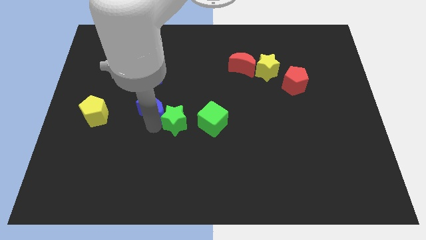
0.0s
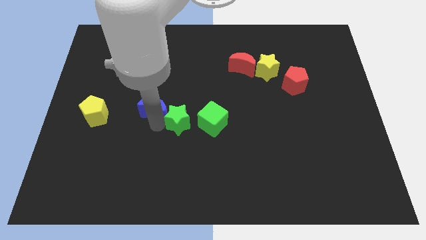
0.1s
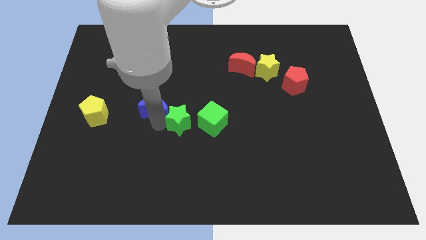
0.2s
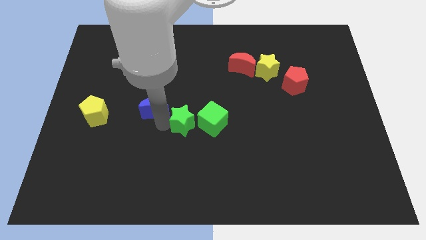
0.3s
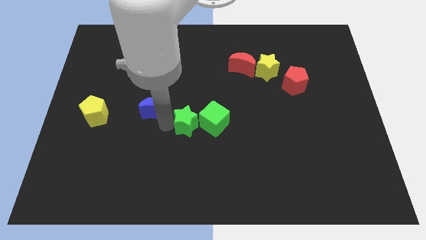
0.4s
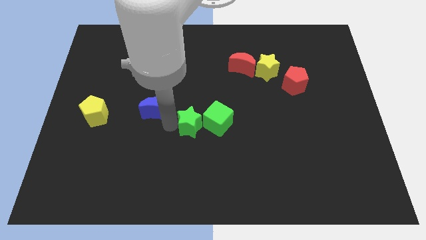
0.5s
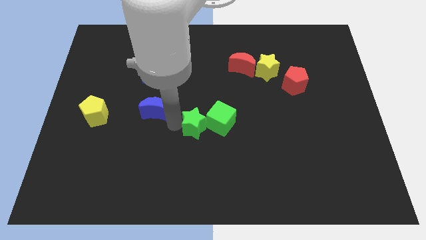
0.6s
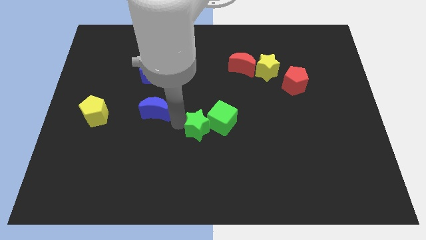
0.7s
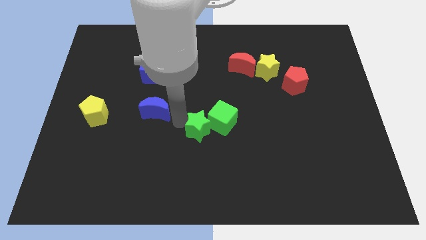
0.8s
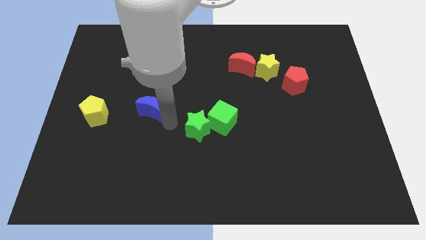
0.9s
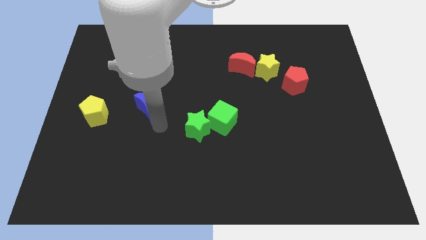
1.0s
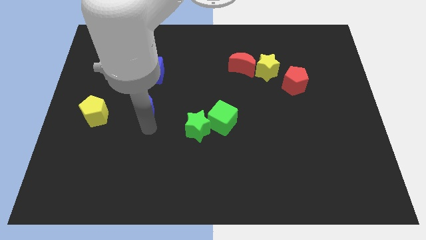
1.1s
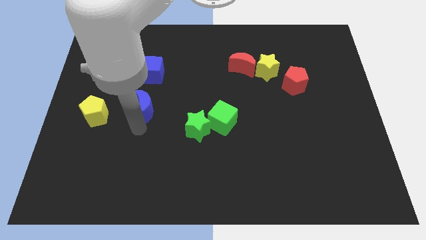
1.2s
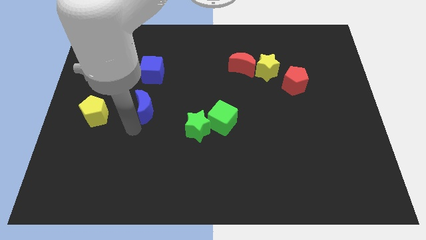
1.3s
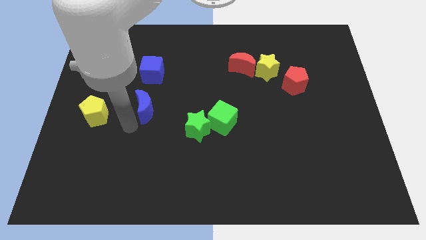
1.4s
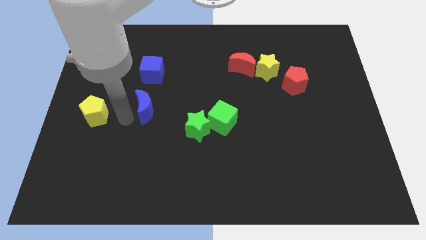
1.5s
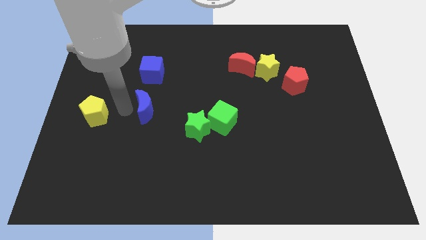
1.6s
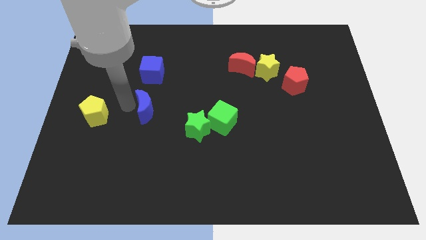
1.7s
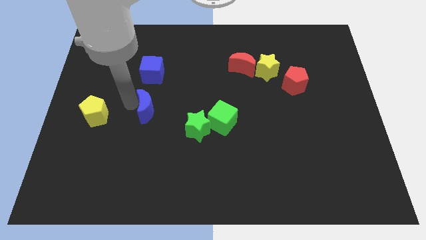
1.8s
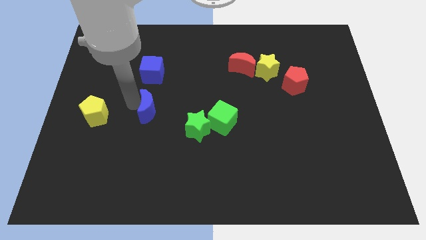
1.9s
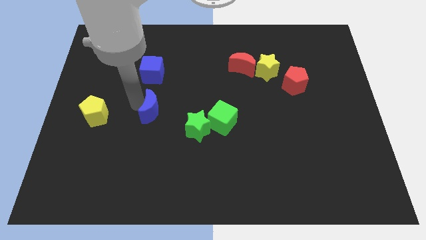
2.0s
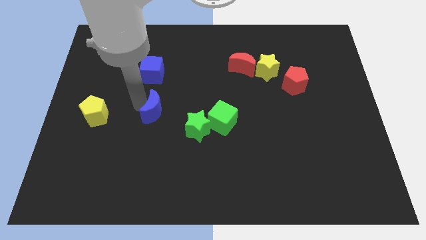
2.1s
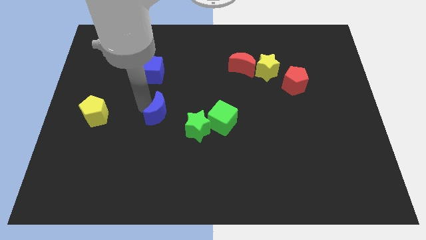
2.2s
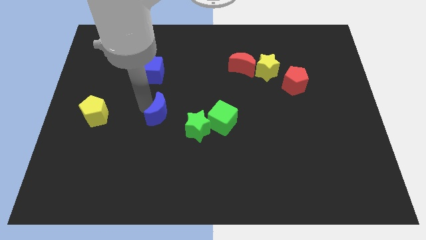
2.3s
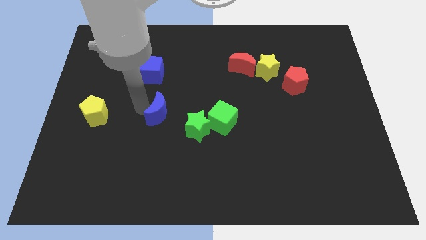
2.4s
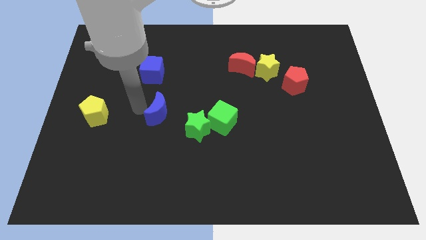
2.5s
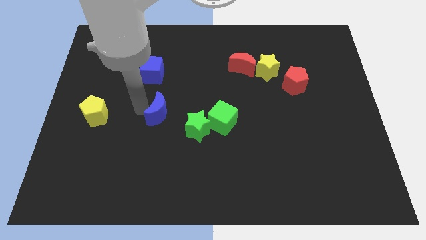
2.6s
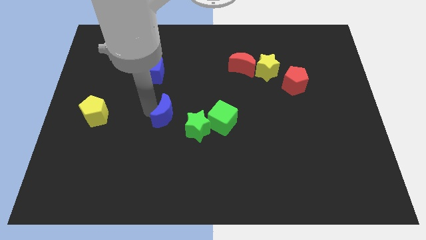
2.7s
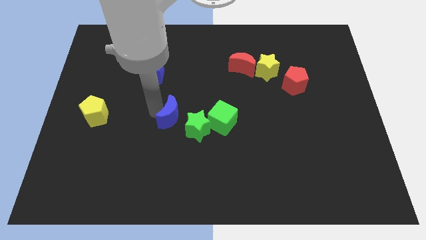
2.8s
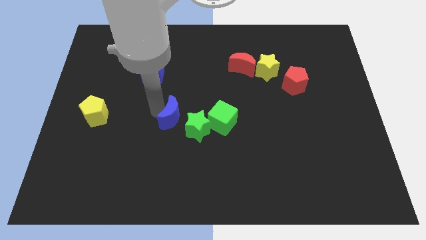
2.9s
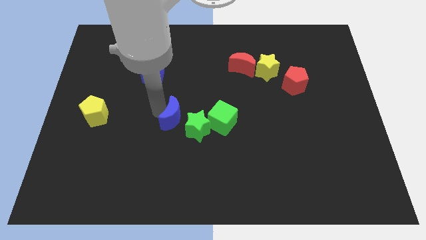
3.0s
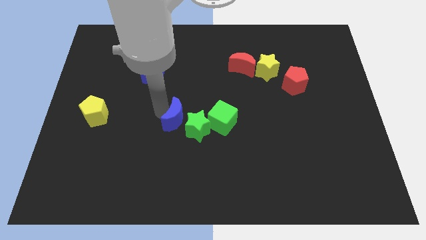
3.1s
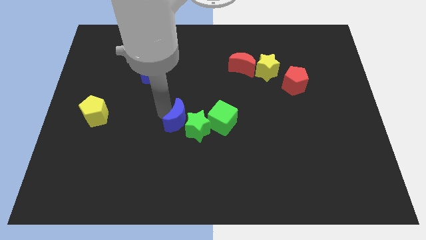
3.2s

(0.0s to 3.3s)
push the blue moon close to the green star

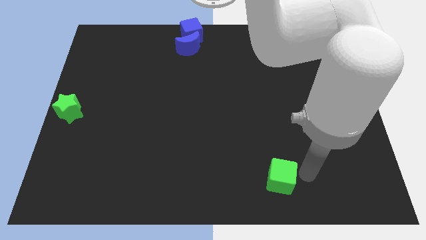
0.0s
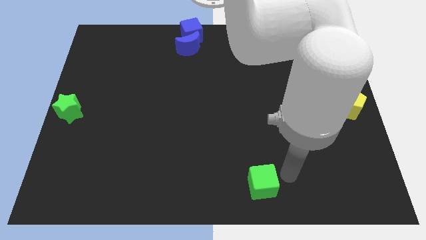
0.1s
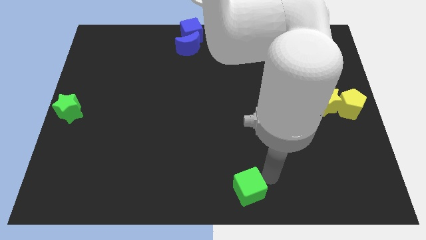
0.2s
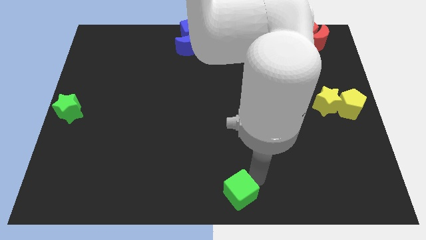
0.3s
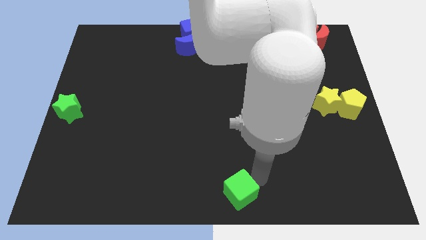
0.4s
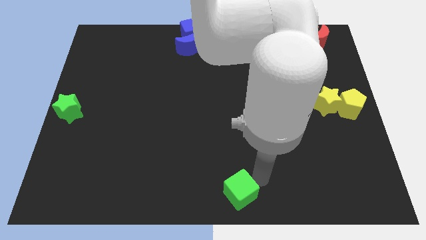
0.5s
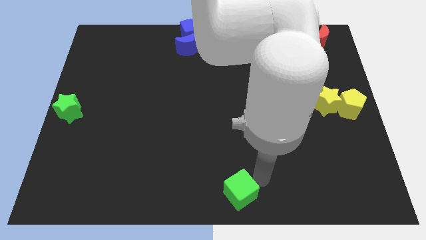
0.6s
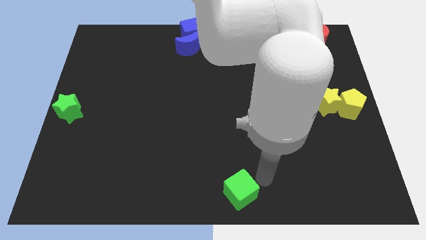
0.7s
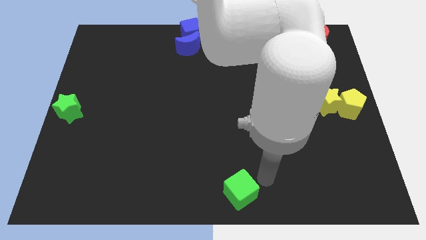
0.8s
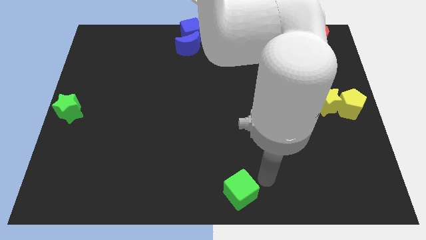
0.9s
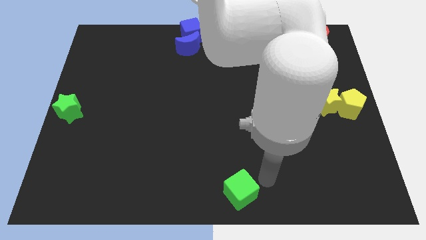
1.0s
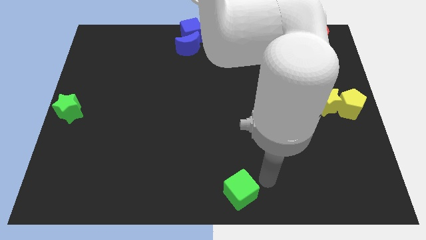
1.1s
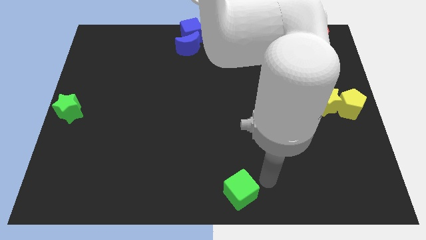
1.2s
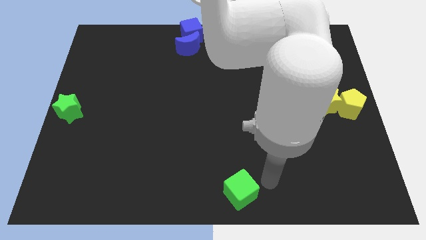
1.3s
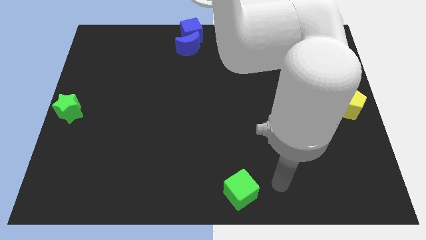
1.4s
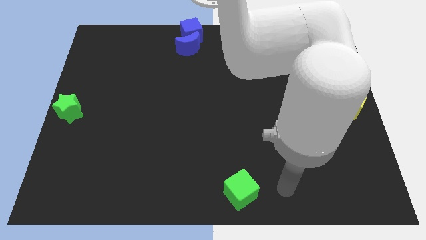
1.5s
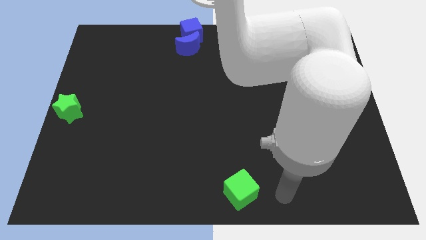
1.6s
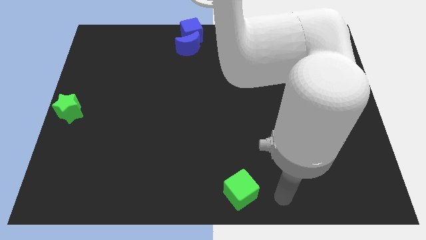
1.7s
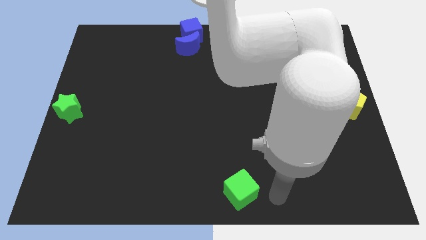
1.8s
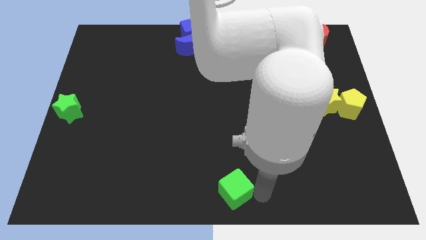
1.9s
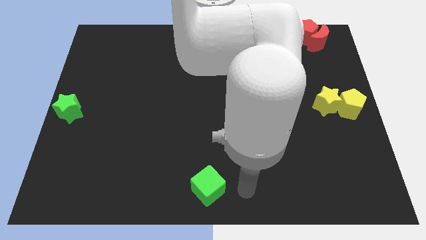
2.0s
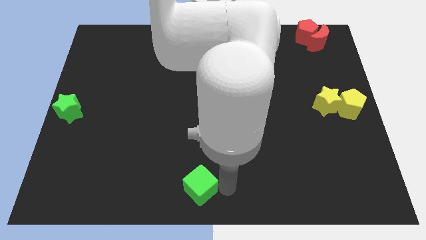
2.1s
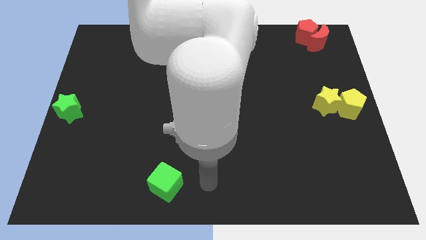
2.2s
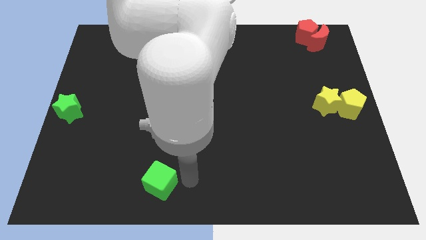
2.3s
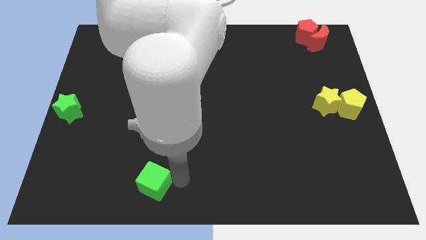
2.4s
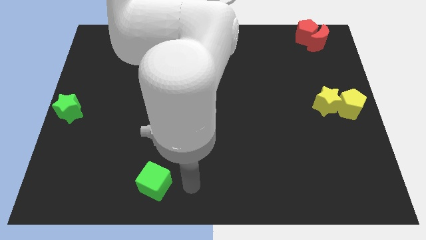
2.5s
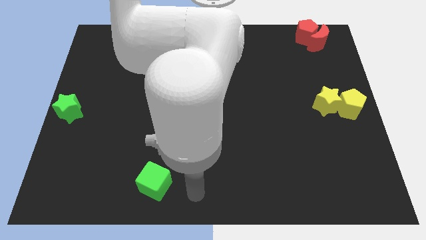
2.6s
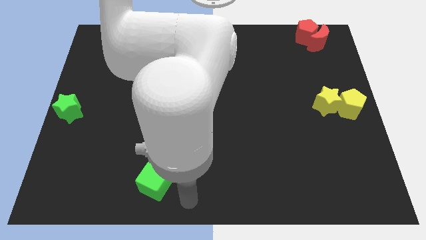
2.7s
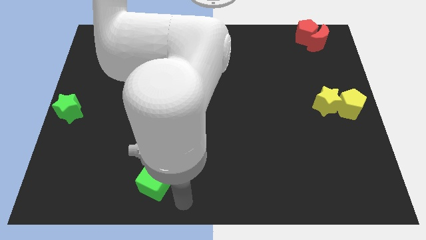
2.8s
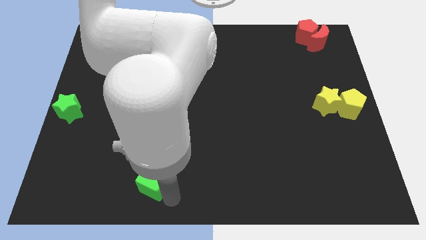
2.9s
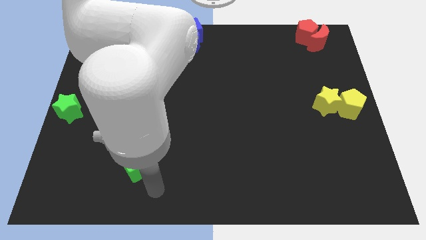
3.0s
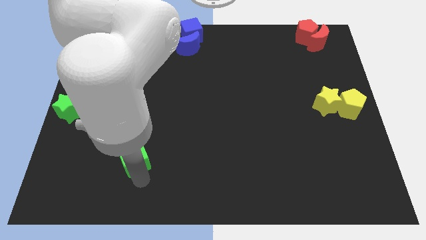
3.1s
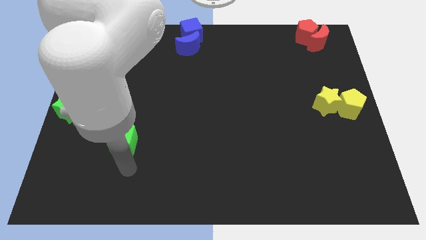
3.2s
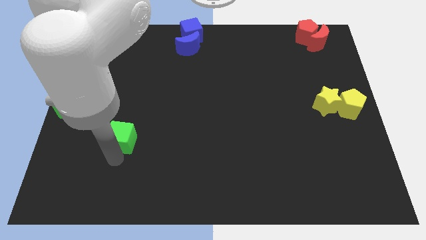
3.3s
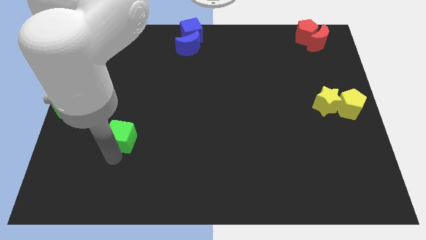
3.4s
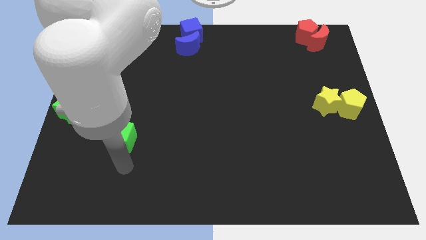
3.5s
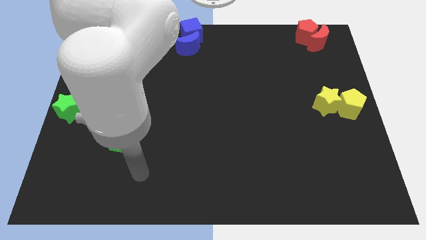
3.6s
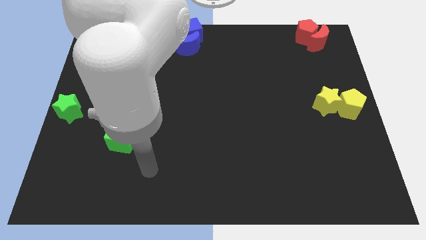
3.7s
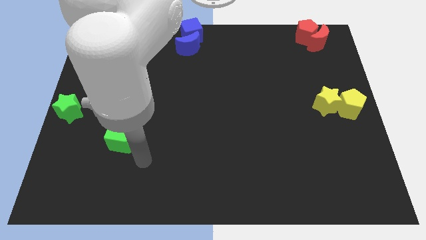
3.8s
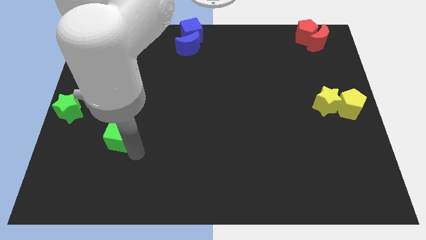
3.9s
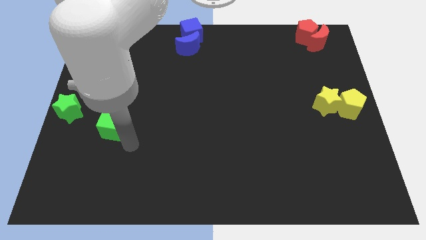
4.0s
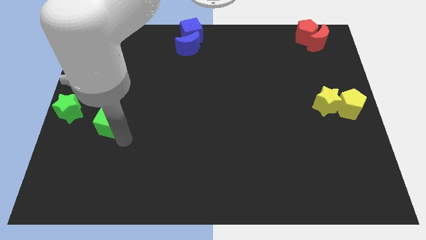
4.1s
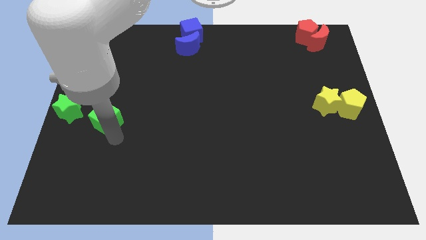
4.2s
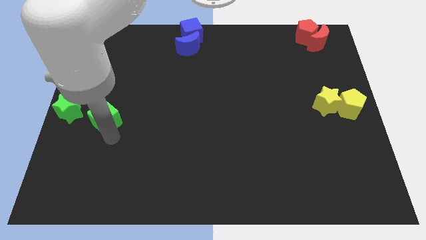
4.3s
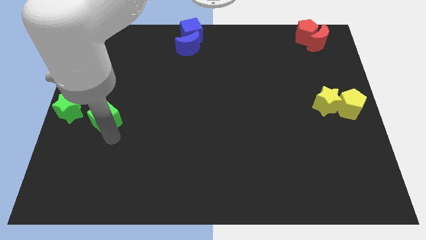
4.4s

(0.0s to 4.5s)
move the green cube towards the green star

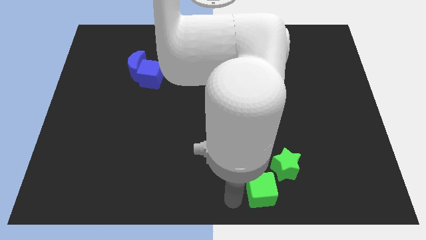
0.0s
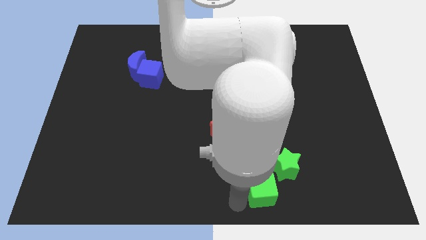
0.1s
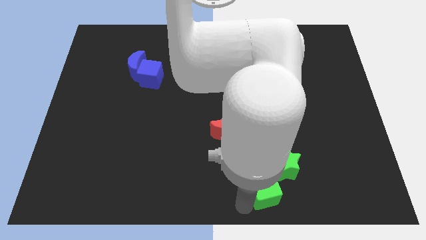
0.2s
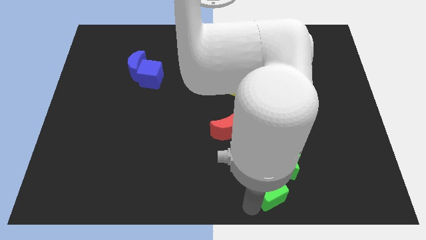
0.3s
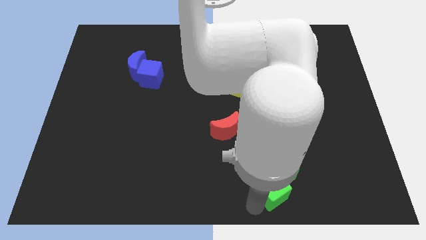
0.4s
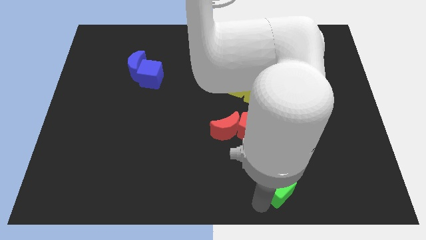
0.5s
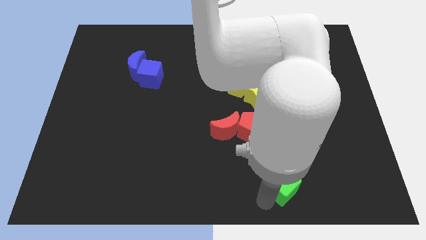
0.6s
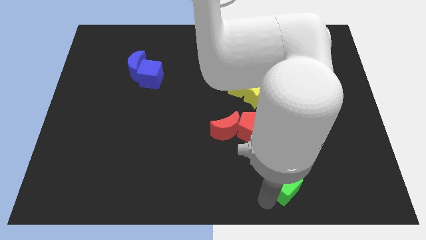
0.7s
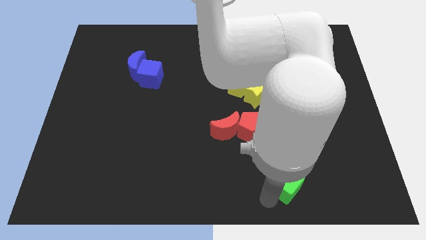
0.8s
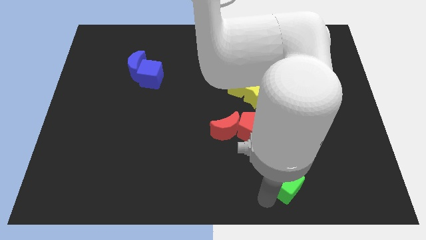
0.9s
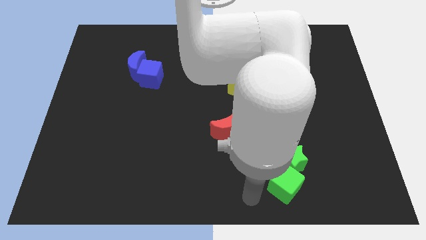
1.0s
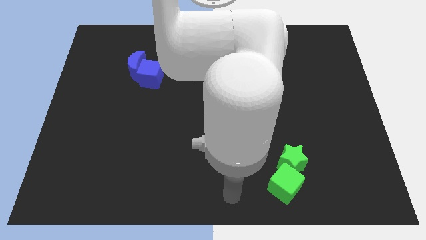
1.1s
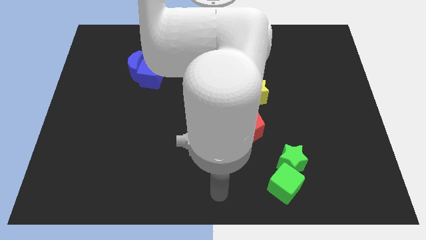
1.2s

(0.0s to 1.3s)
push the green cube into the green star
